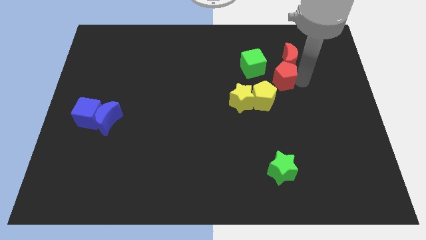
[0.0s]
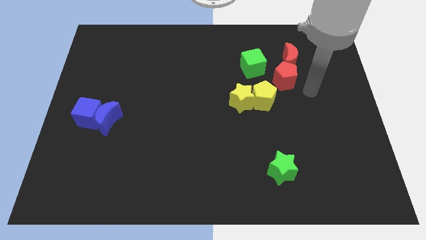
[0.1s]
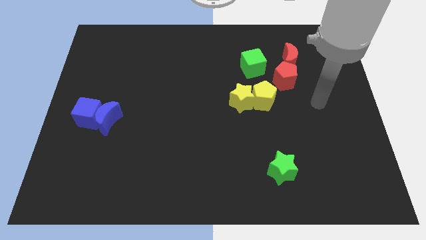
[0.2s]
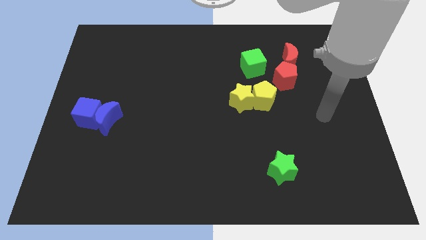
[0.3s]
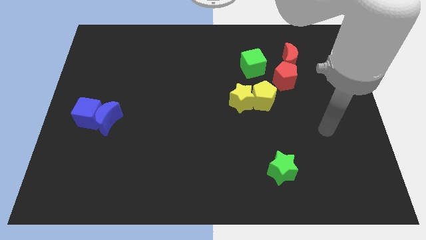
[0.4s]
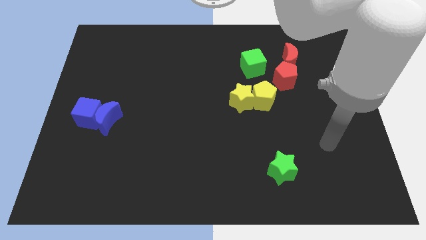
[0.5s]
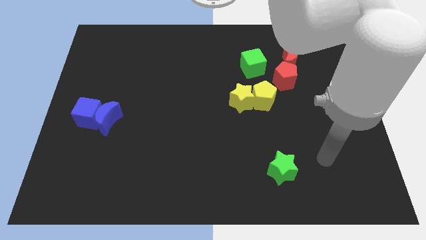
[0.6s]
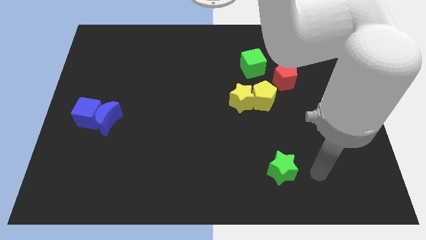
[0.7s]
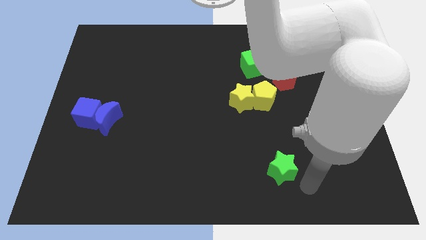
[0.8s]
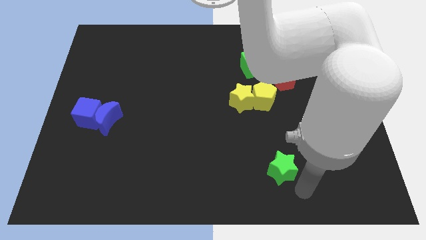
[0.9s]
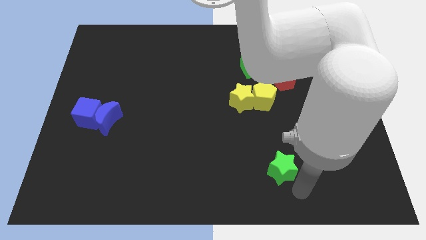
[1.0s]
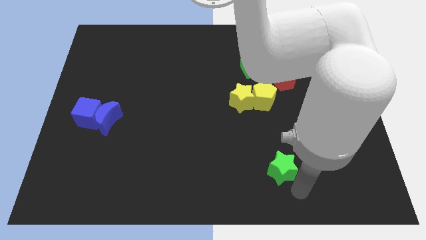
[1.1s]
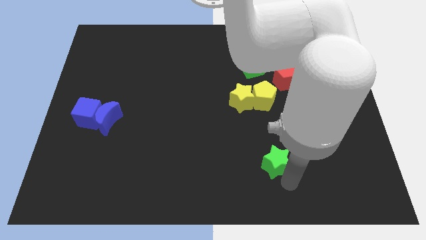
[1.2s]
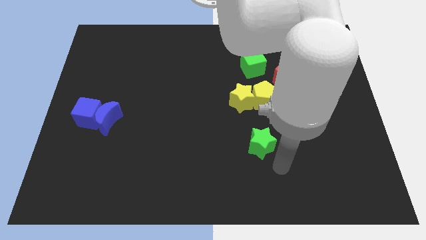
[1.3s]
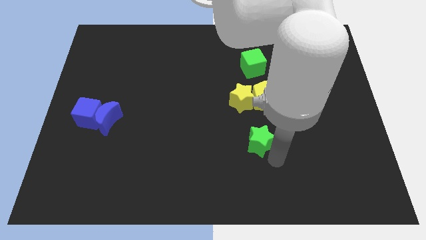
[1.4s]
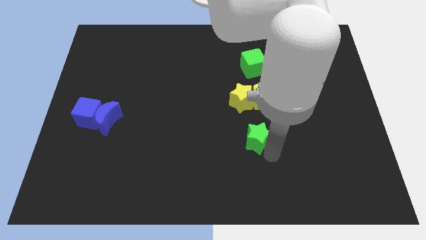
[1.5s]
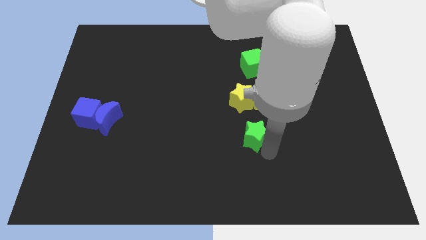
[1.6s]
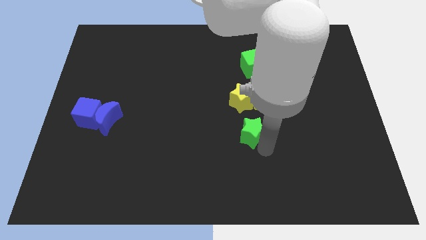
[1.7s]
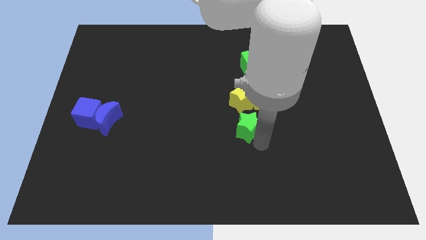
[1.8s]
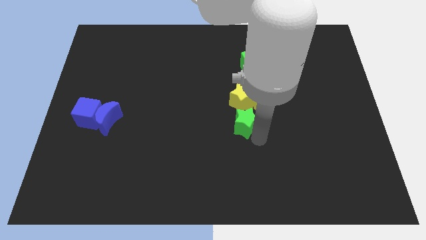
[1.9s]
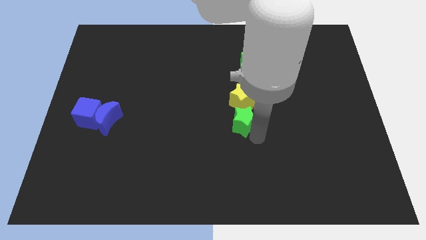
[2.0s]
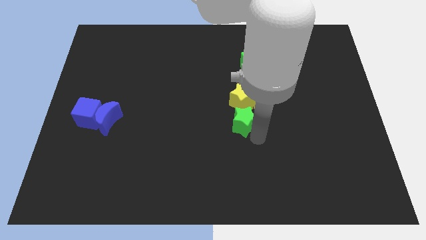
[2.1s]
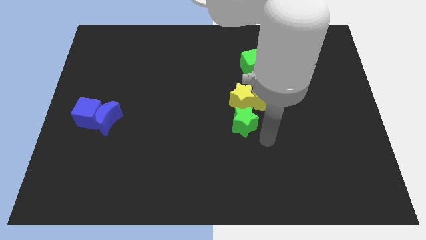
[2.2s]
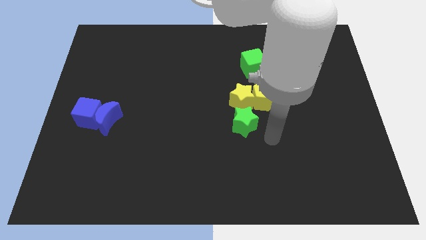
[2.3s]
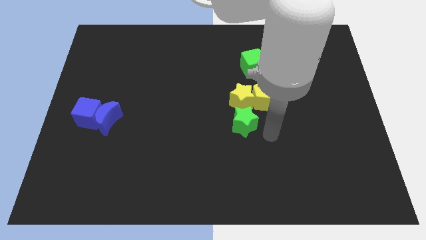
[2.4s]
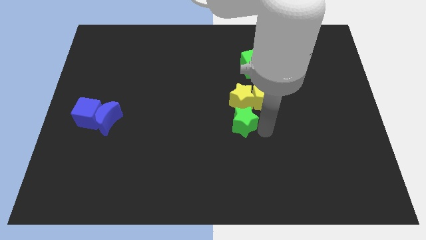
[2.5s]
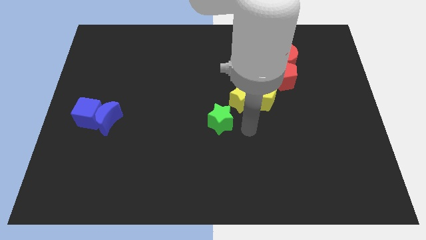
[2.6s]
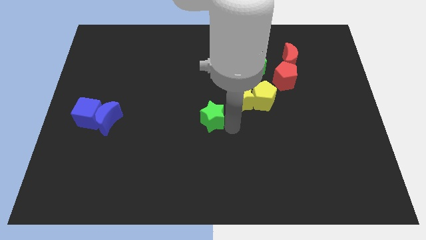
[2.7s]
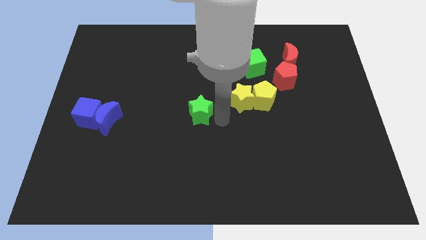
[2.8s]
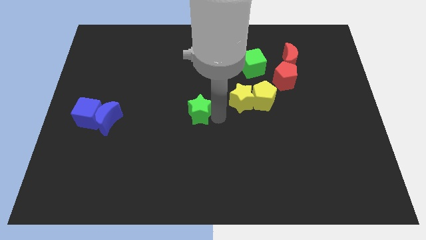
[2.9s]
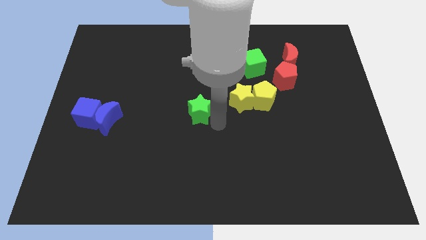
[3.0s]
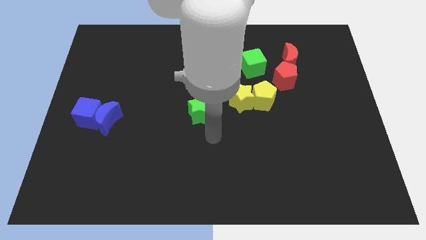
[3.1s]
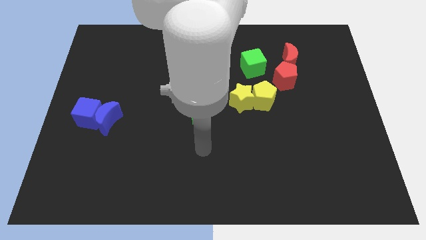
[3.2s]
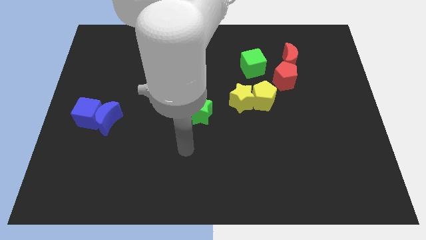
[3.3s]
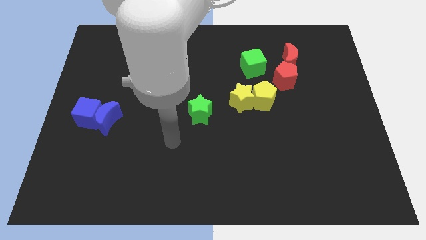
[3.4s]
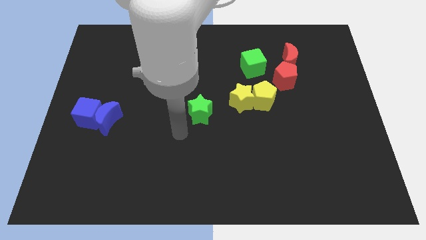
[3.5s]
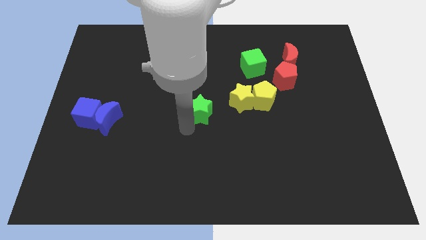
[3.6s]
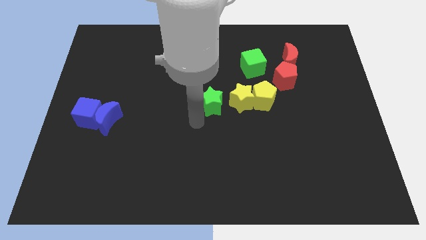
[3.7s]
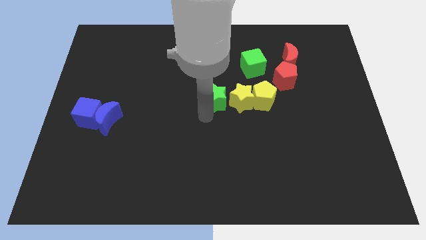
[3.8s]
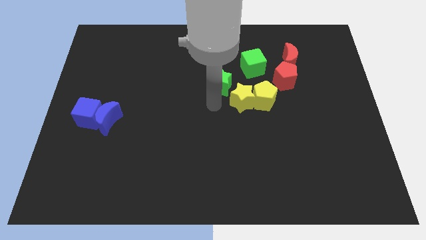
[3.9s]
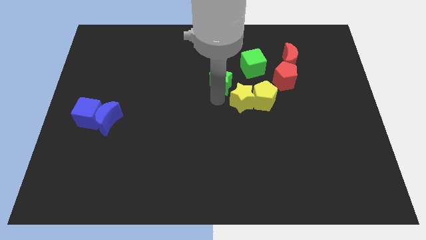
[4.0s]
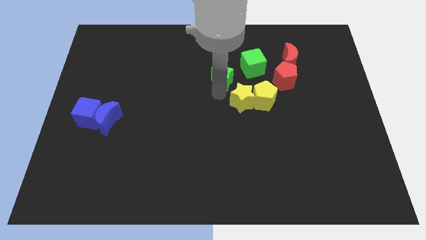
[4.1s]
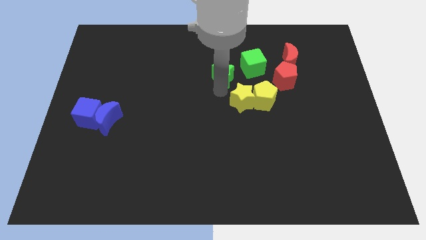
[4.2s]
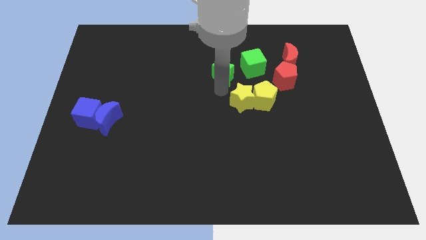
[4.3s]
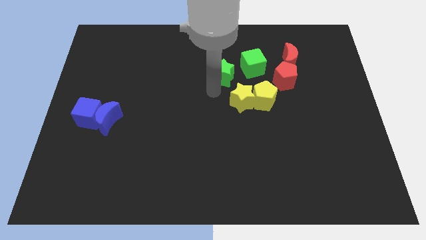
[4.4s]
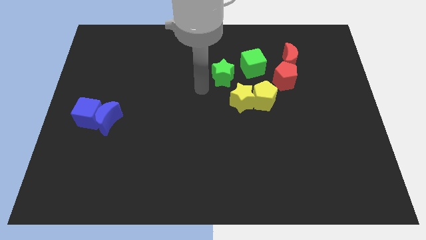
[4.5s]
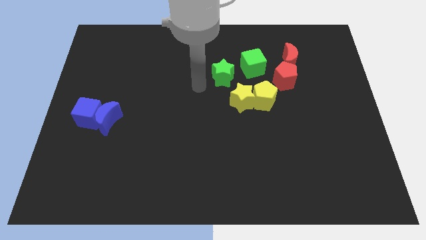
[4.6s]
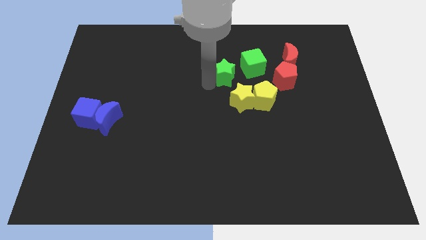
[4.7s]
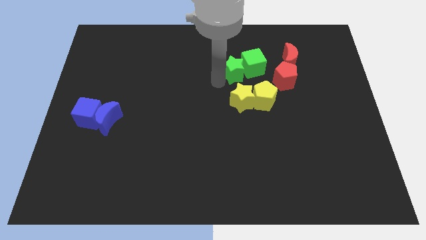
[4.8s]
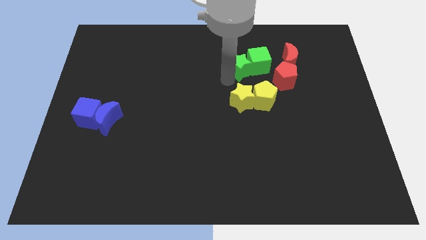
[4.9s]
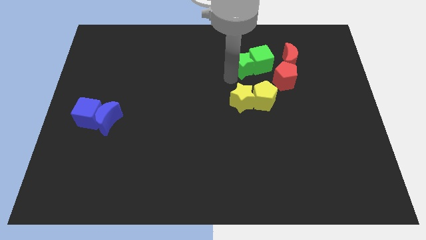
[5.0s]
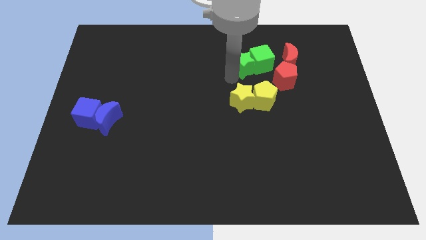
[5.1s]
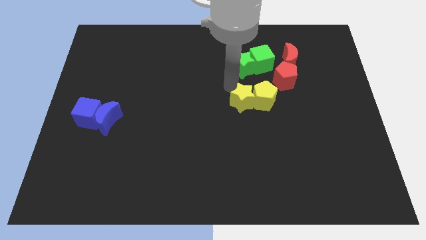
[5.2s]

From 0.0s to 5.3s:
push the green star into the green cube

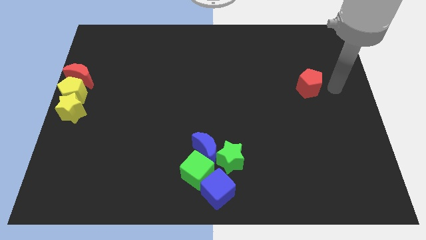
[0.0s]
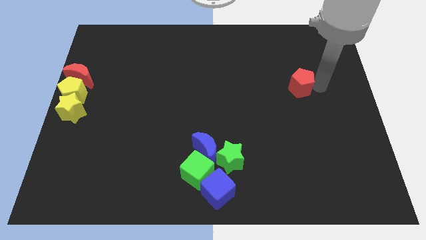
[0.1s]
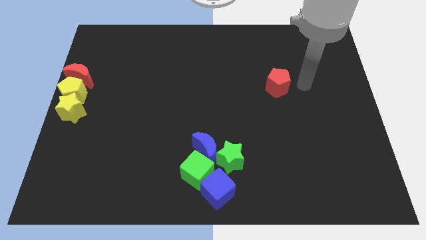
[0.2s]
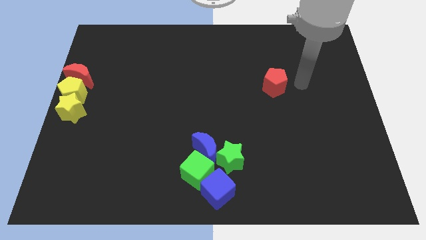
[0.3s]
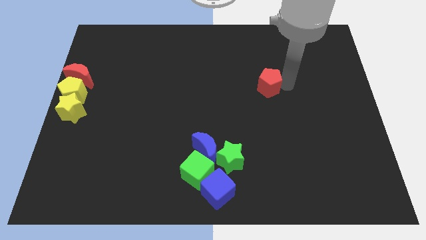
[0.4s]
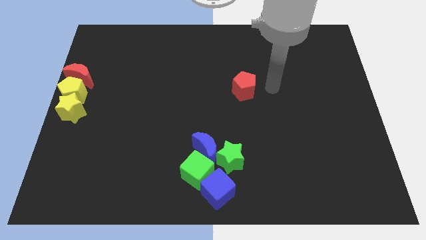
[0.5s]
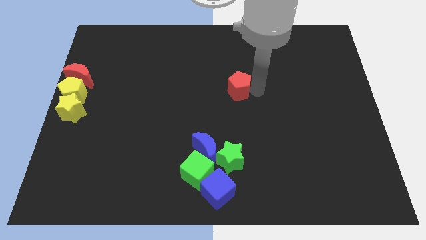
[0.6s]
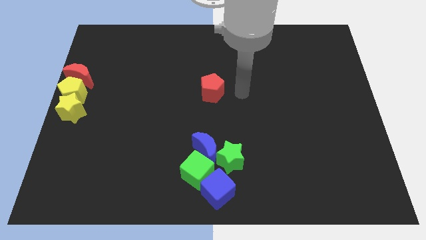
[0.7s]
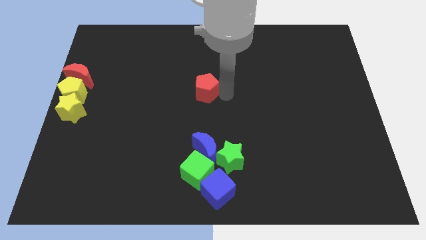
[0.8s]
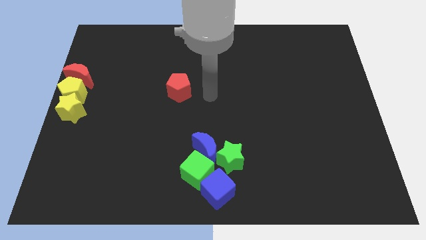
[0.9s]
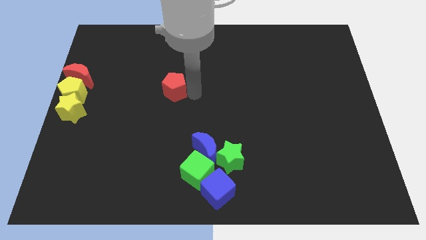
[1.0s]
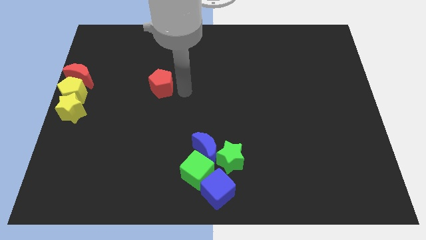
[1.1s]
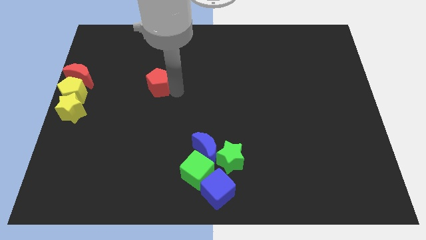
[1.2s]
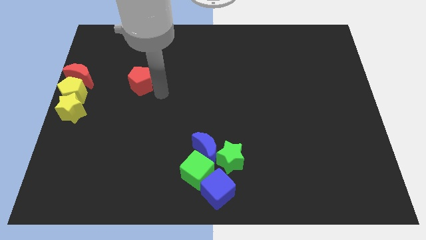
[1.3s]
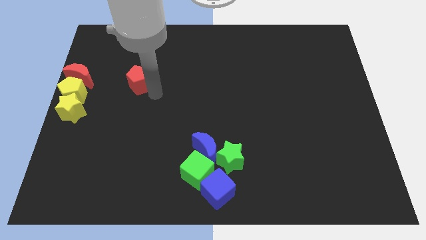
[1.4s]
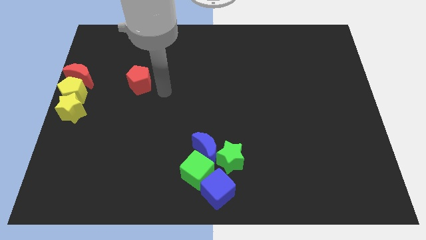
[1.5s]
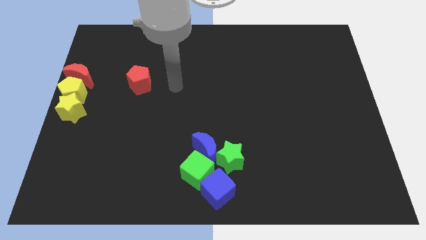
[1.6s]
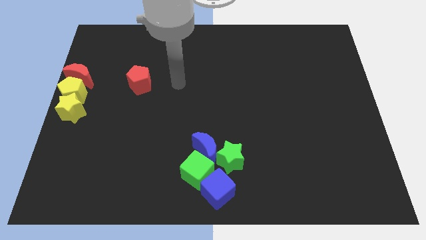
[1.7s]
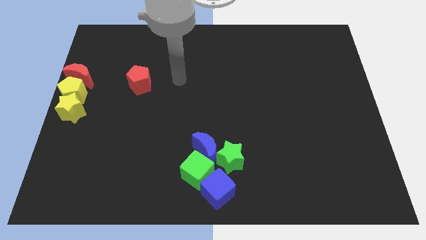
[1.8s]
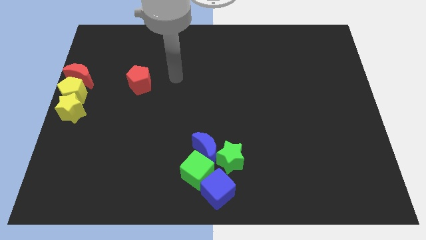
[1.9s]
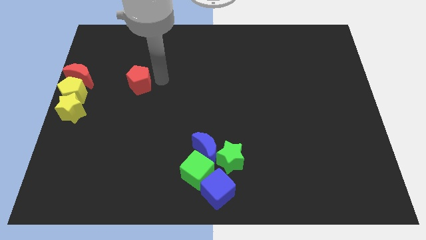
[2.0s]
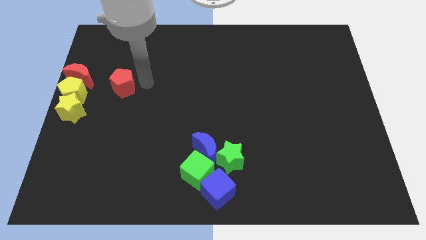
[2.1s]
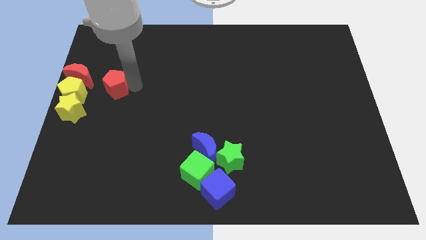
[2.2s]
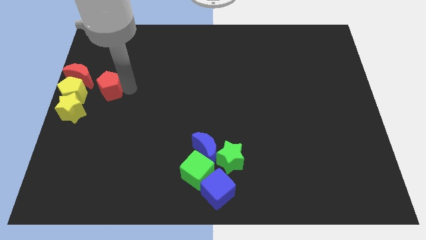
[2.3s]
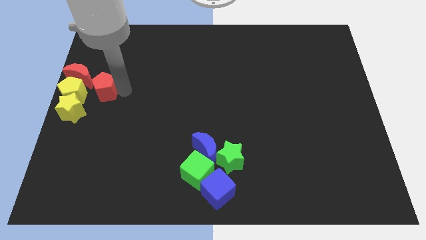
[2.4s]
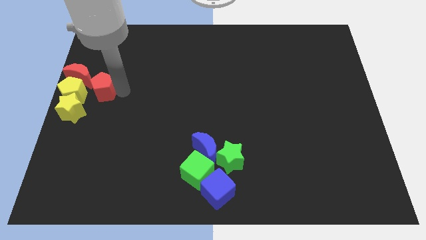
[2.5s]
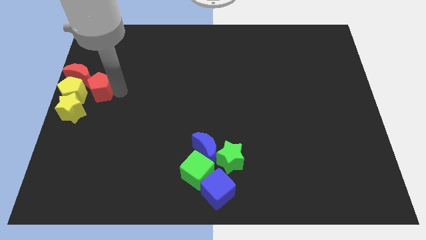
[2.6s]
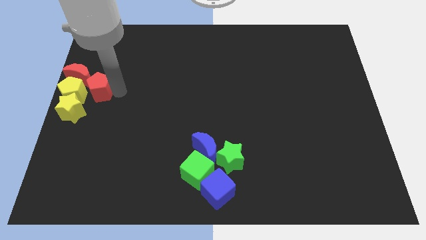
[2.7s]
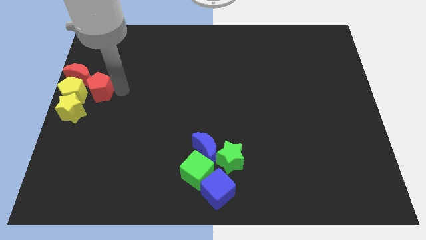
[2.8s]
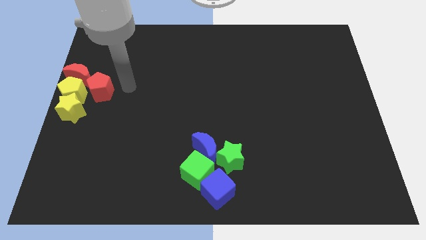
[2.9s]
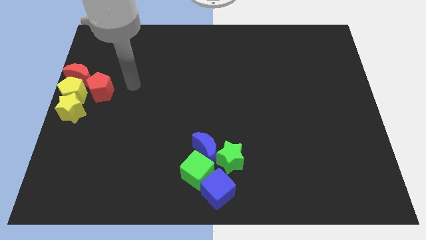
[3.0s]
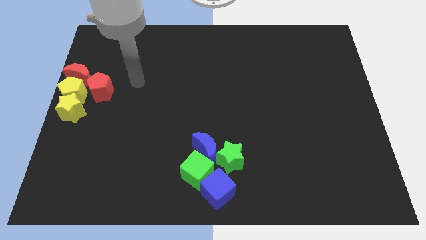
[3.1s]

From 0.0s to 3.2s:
place red pentagon on the right side of the yellow pentagon

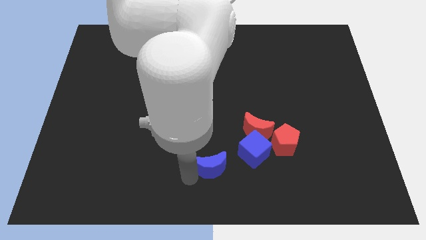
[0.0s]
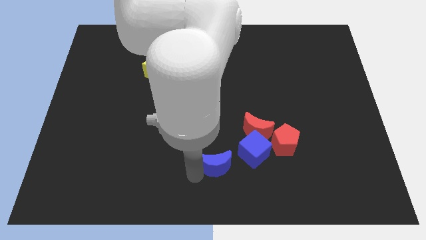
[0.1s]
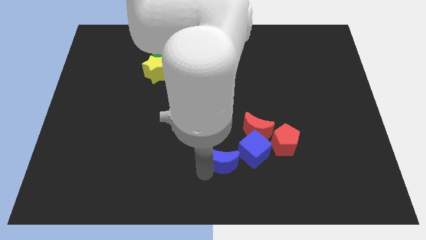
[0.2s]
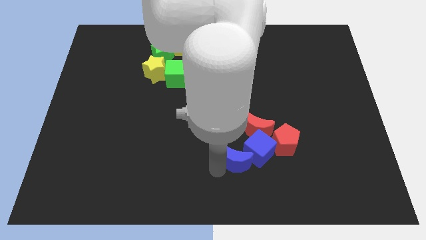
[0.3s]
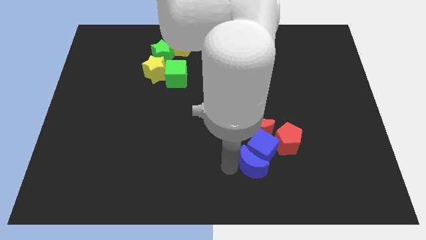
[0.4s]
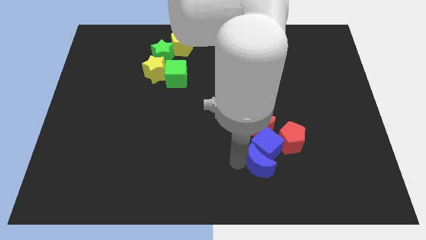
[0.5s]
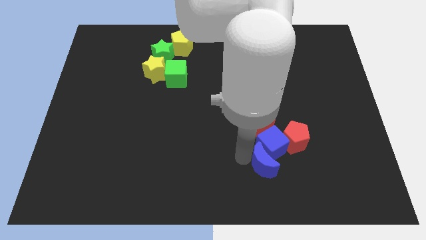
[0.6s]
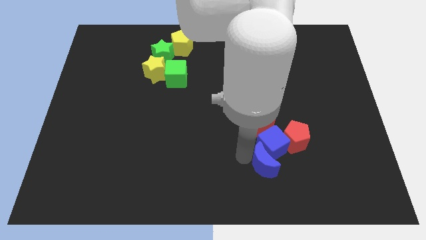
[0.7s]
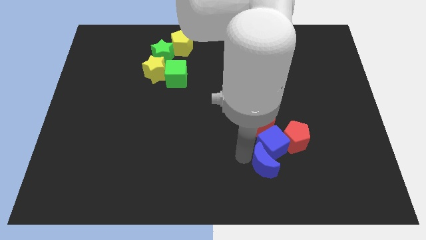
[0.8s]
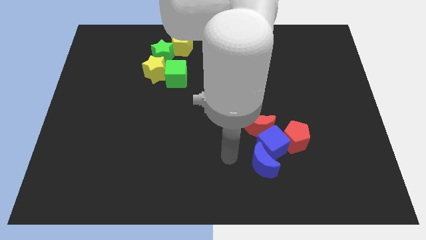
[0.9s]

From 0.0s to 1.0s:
move the blue and red blocks close to each other
